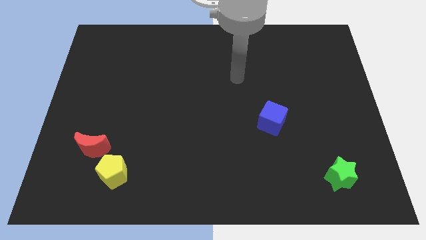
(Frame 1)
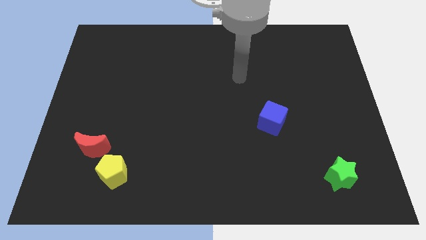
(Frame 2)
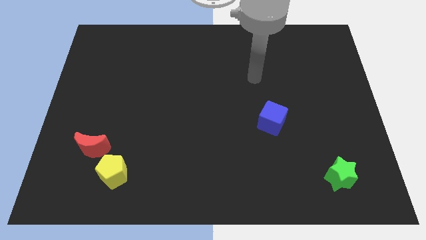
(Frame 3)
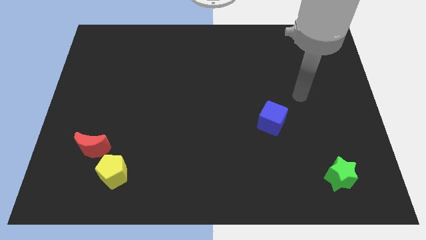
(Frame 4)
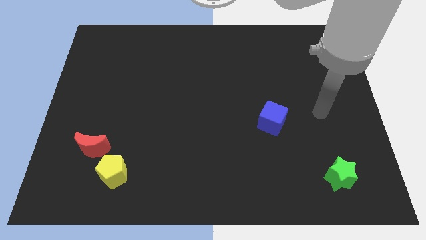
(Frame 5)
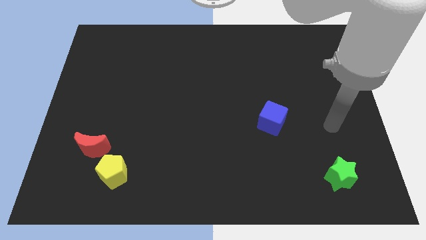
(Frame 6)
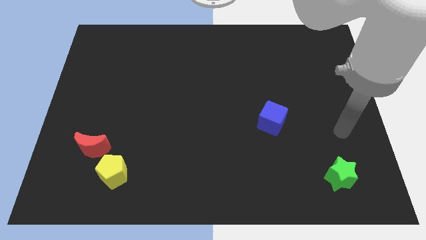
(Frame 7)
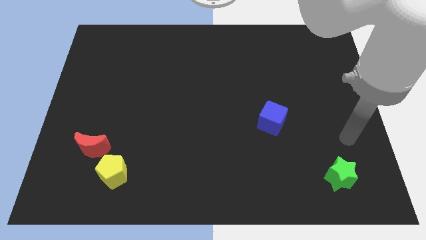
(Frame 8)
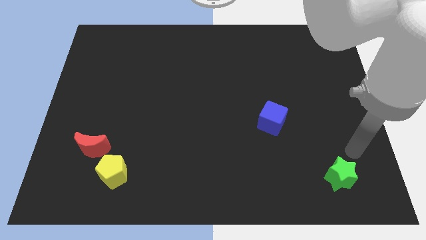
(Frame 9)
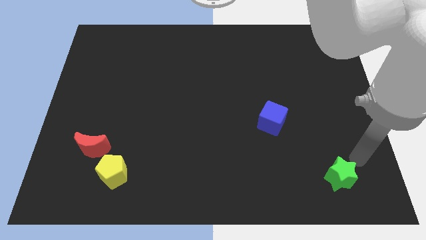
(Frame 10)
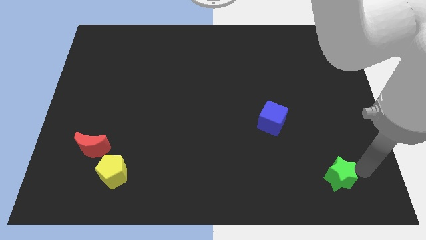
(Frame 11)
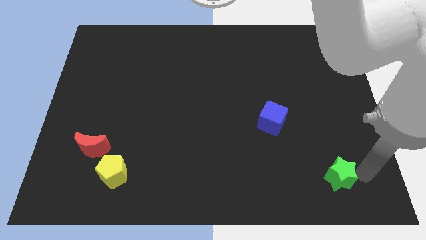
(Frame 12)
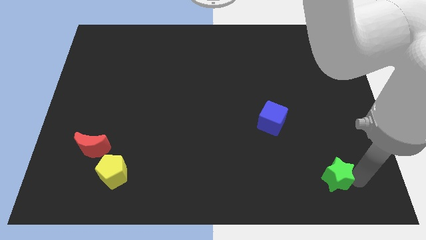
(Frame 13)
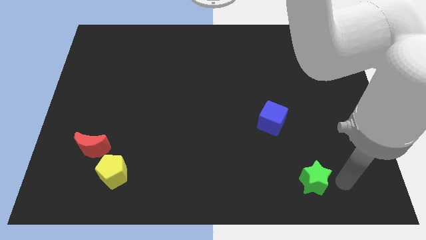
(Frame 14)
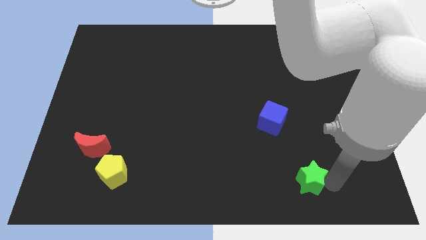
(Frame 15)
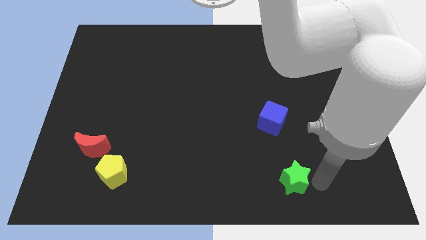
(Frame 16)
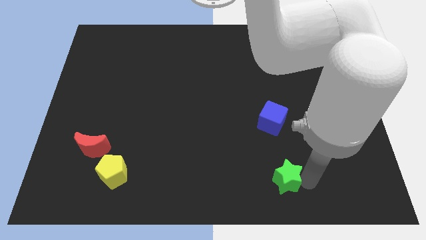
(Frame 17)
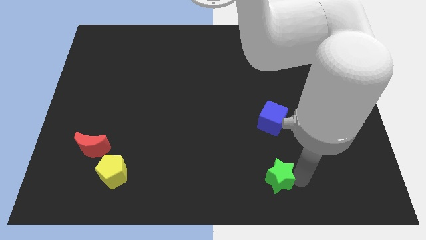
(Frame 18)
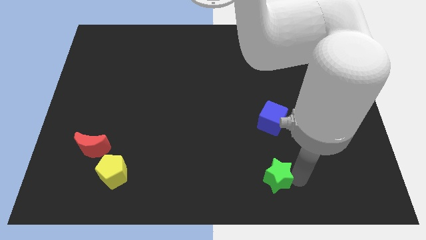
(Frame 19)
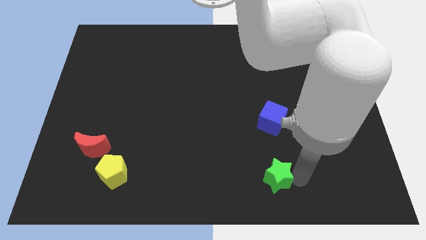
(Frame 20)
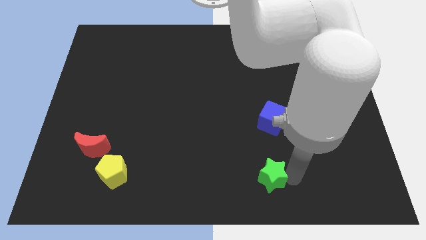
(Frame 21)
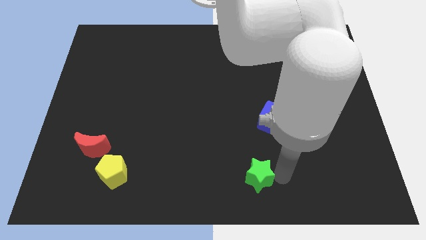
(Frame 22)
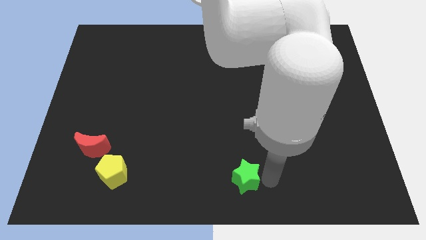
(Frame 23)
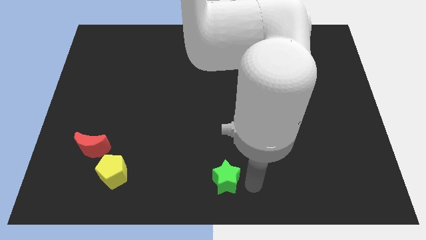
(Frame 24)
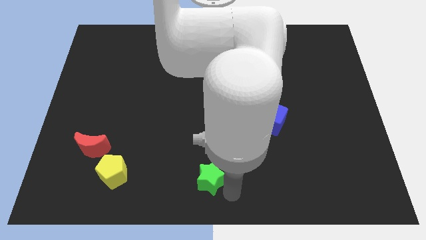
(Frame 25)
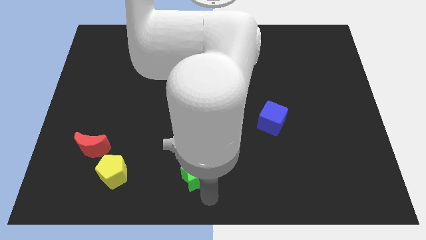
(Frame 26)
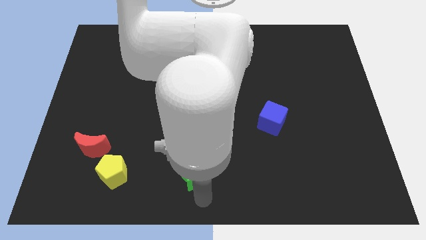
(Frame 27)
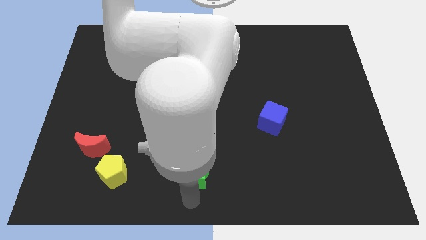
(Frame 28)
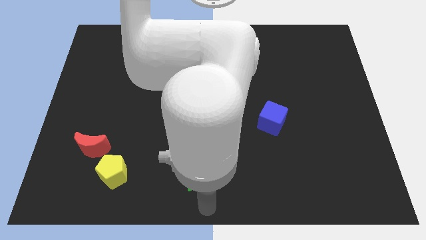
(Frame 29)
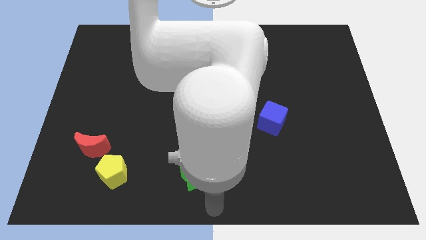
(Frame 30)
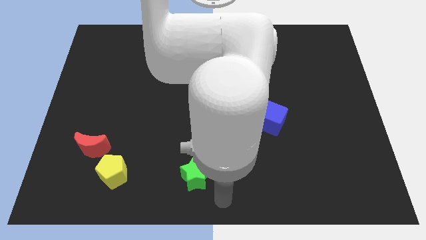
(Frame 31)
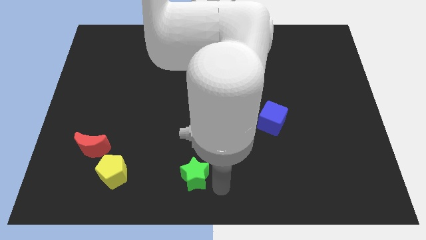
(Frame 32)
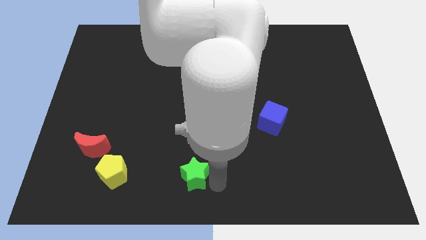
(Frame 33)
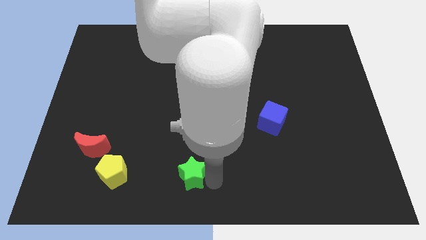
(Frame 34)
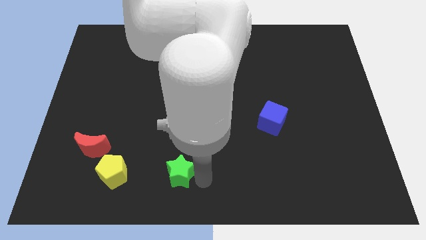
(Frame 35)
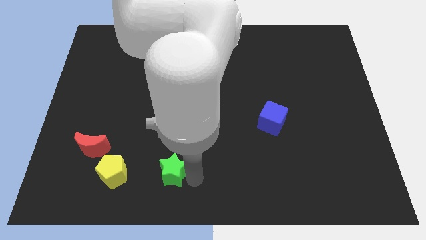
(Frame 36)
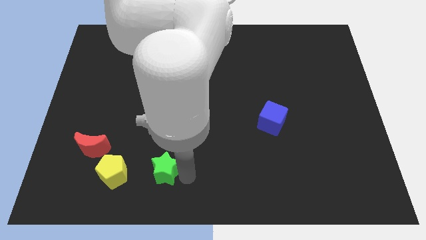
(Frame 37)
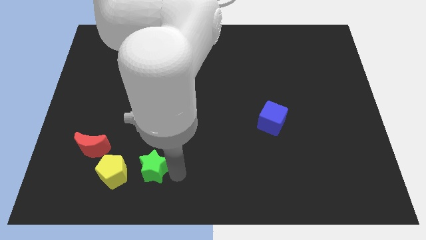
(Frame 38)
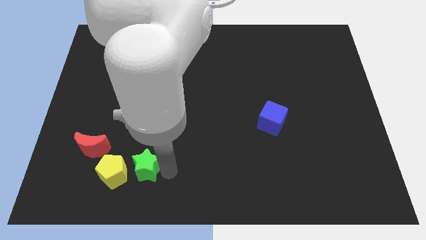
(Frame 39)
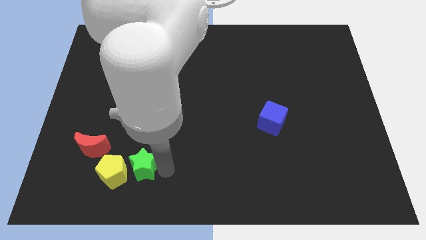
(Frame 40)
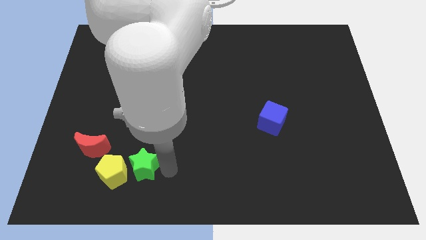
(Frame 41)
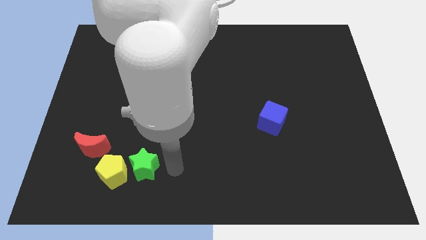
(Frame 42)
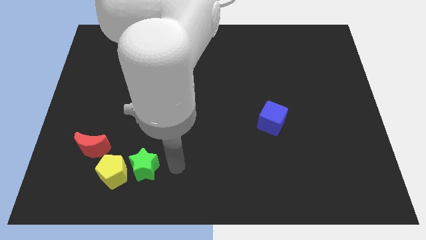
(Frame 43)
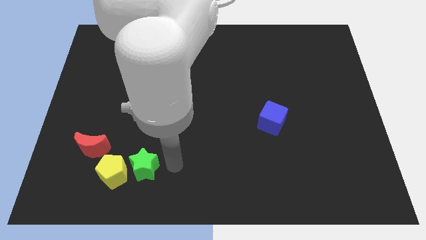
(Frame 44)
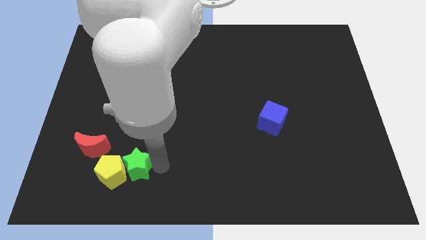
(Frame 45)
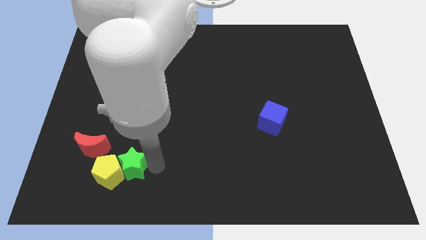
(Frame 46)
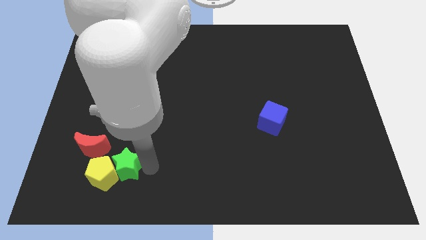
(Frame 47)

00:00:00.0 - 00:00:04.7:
slide the green block close to the yellow pentagon

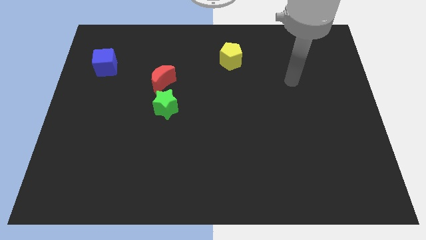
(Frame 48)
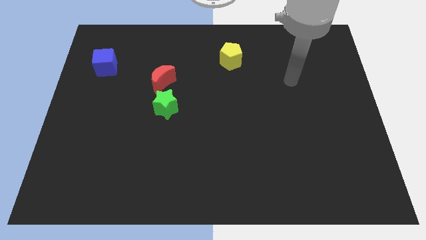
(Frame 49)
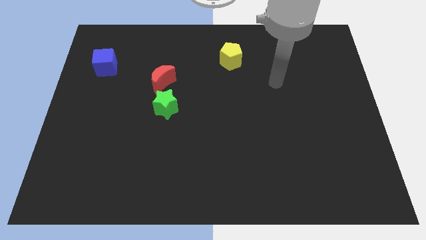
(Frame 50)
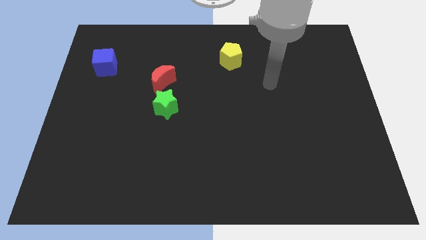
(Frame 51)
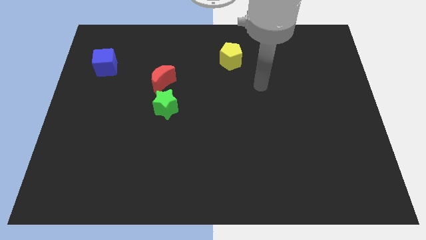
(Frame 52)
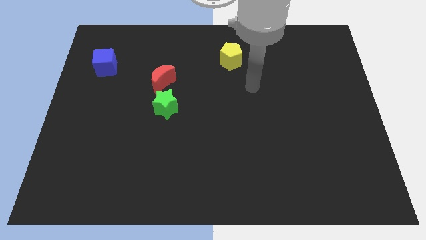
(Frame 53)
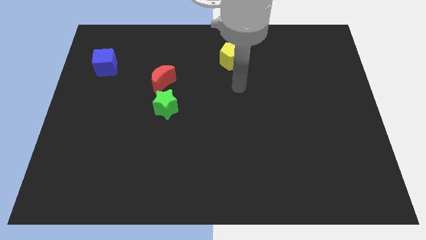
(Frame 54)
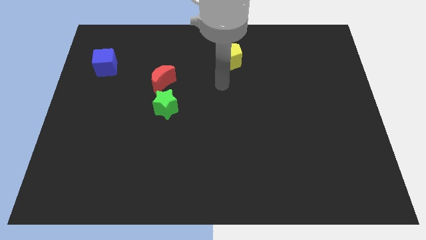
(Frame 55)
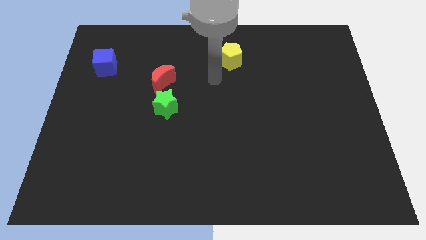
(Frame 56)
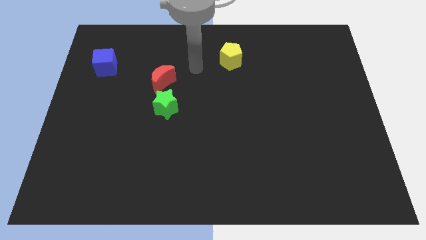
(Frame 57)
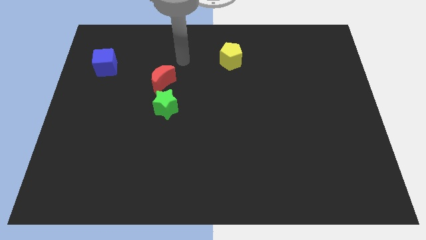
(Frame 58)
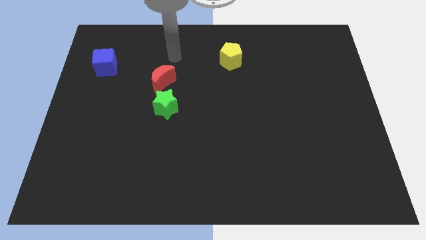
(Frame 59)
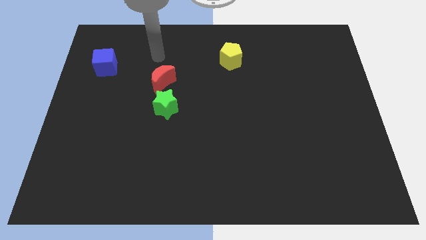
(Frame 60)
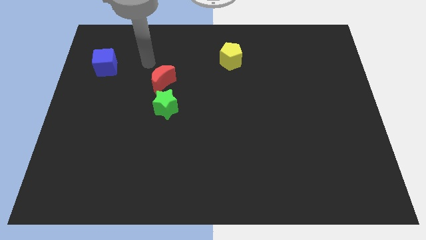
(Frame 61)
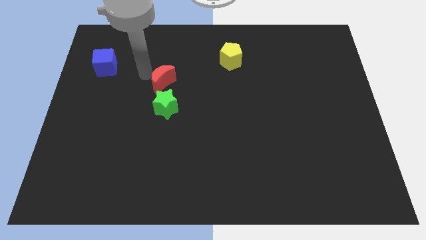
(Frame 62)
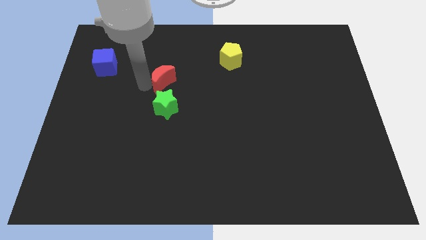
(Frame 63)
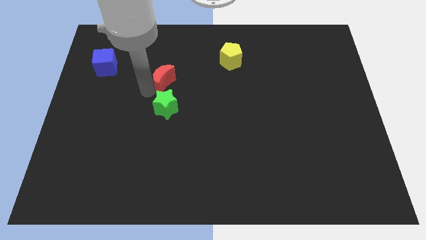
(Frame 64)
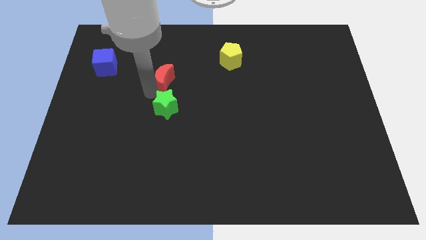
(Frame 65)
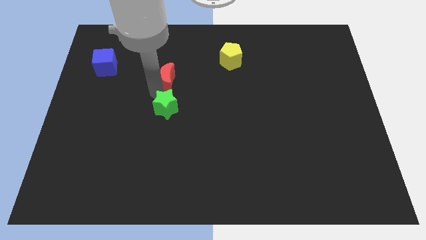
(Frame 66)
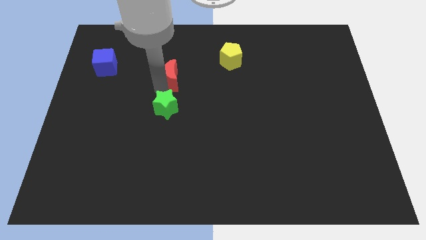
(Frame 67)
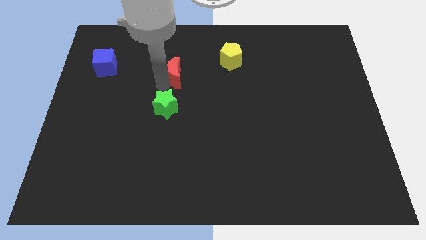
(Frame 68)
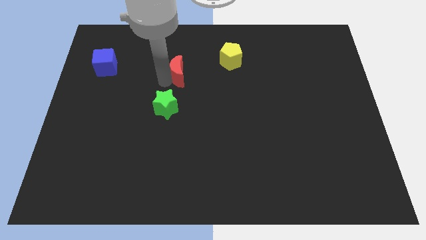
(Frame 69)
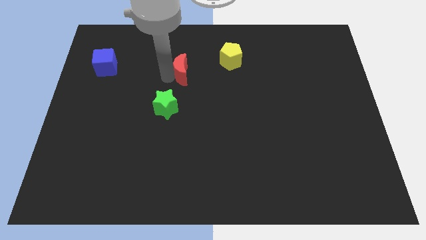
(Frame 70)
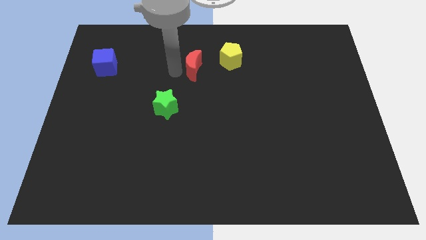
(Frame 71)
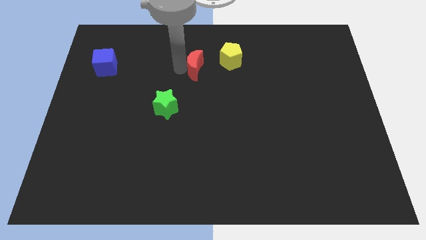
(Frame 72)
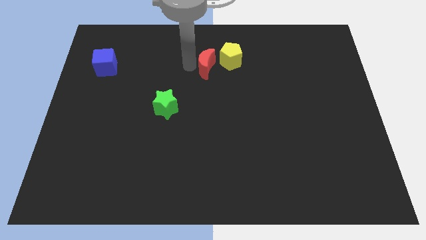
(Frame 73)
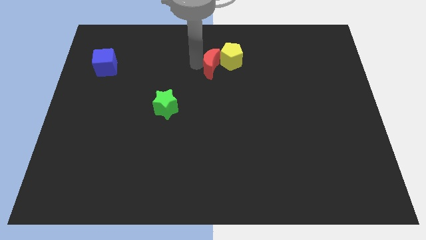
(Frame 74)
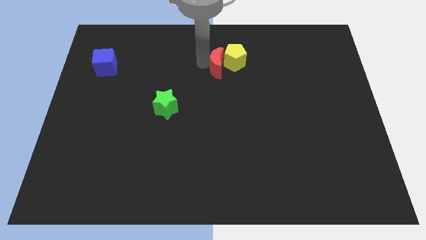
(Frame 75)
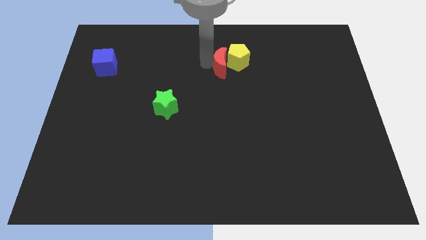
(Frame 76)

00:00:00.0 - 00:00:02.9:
put the moon close to the yellow pentagon

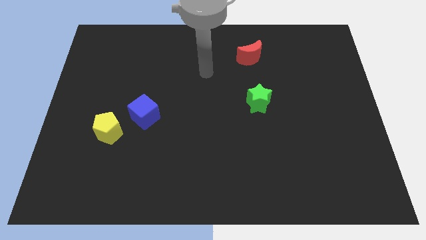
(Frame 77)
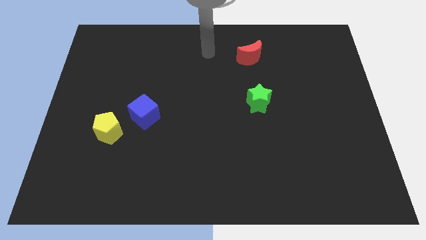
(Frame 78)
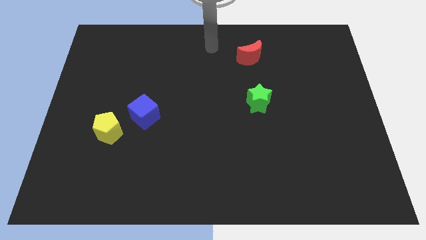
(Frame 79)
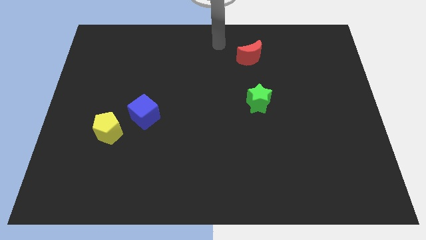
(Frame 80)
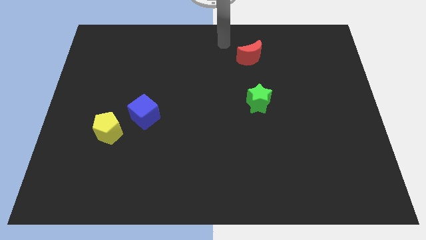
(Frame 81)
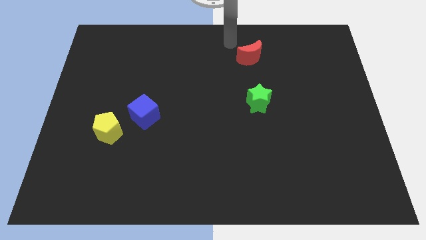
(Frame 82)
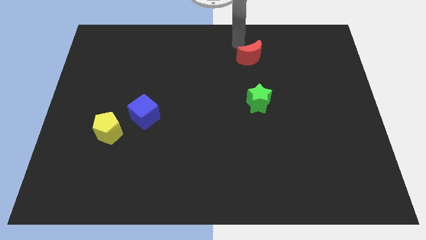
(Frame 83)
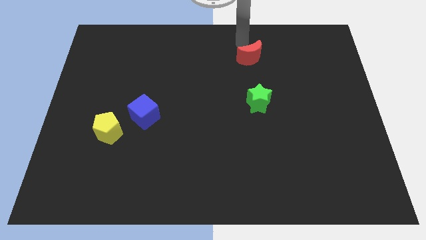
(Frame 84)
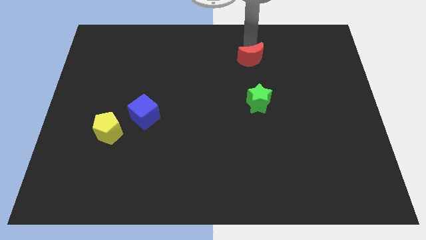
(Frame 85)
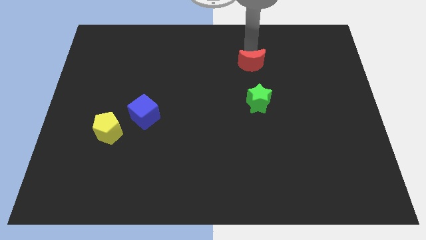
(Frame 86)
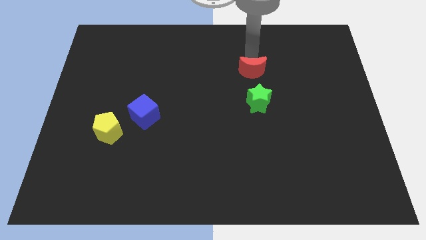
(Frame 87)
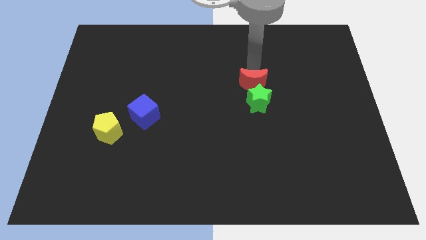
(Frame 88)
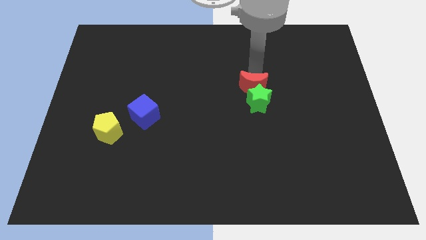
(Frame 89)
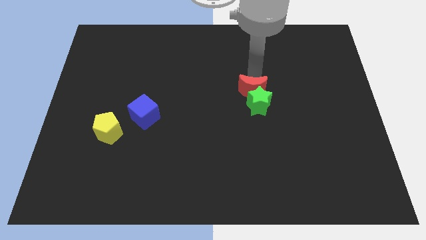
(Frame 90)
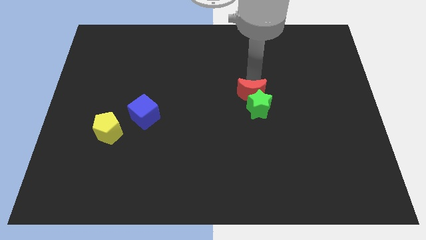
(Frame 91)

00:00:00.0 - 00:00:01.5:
move the moon to the green block
